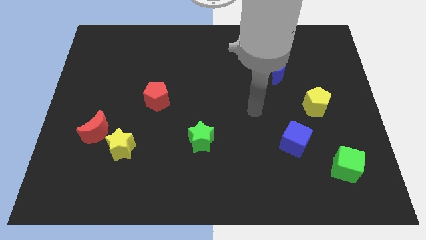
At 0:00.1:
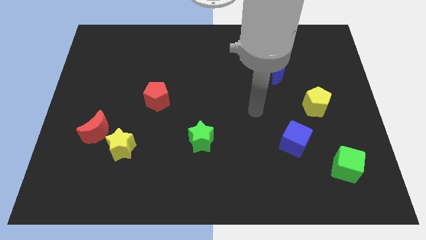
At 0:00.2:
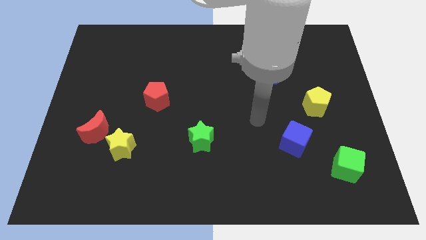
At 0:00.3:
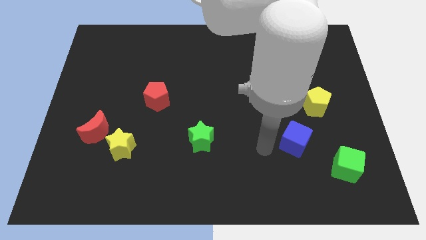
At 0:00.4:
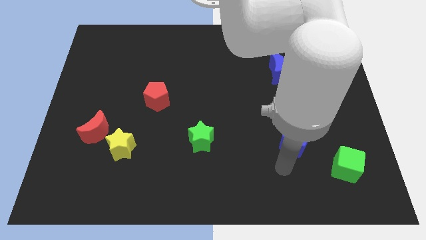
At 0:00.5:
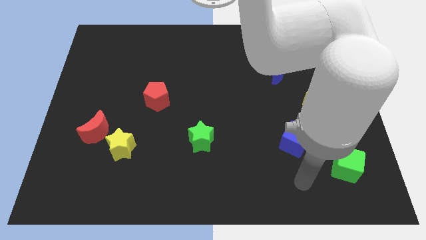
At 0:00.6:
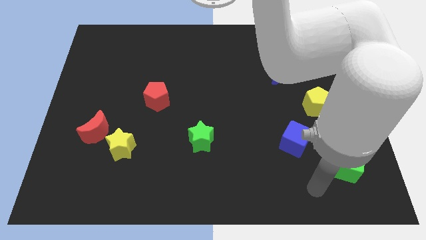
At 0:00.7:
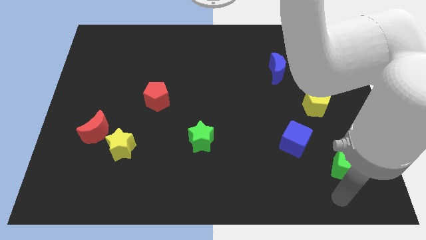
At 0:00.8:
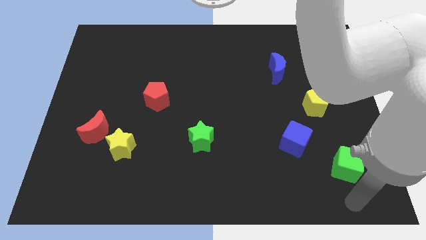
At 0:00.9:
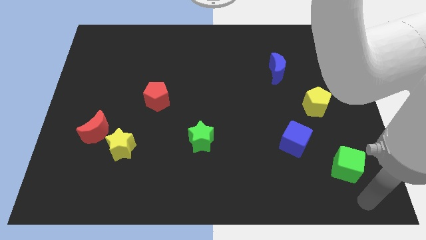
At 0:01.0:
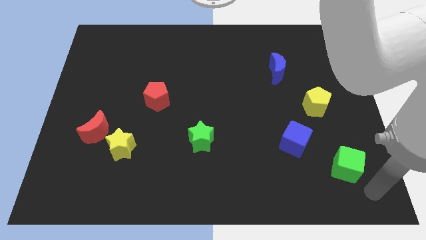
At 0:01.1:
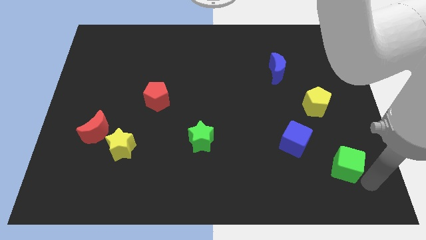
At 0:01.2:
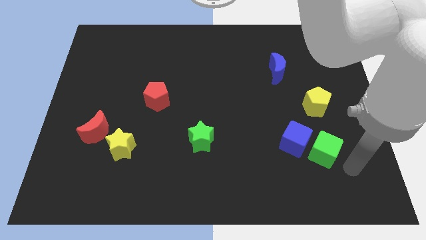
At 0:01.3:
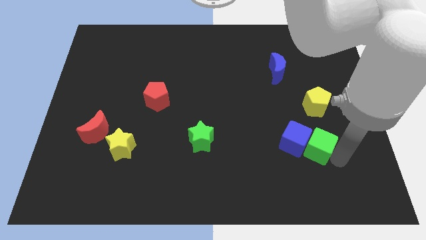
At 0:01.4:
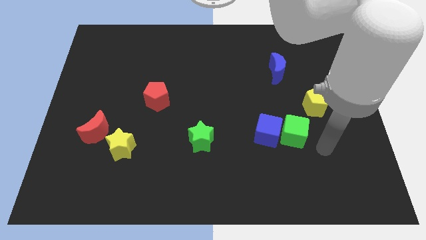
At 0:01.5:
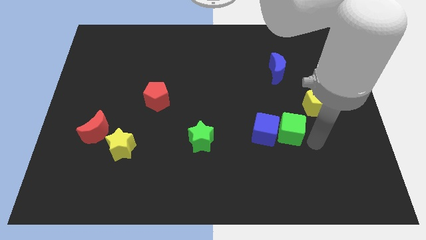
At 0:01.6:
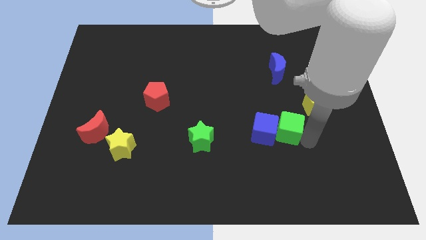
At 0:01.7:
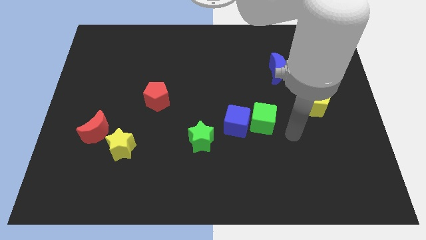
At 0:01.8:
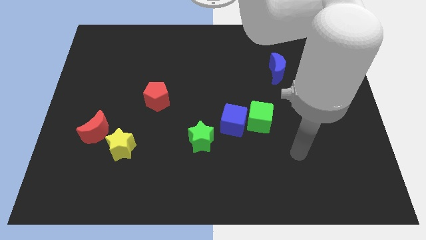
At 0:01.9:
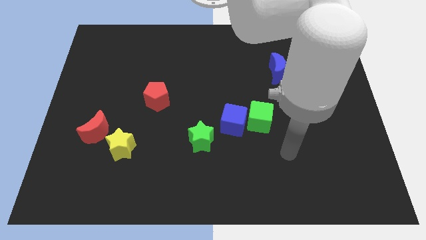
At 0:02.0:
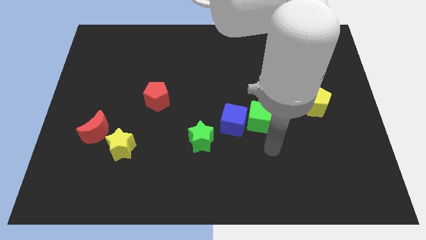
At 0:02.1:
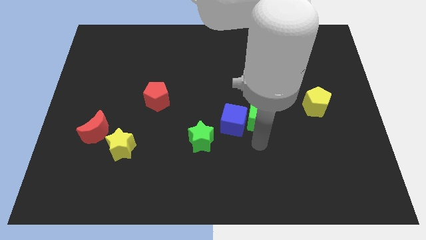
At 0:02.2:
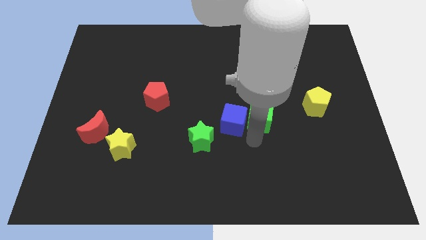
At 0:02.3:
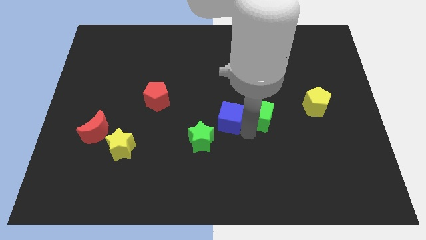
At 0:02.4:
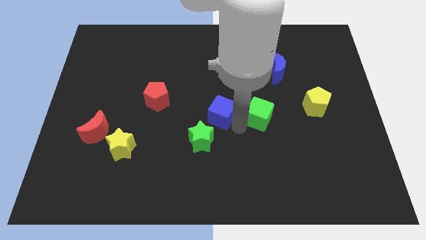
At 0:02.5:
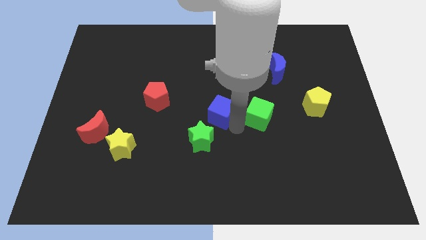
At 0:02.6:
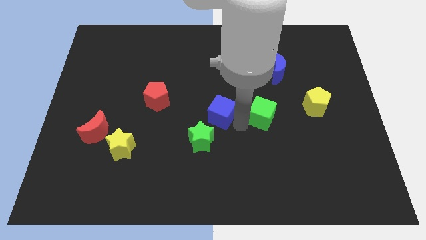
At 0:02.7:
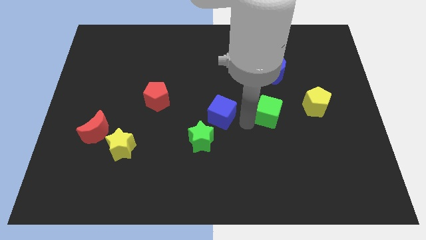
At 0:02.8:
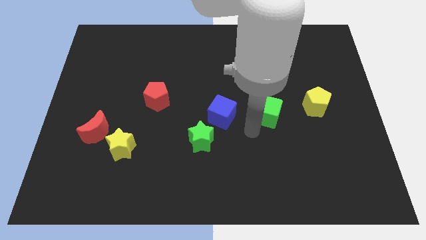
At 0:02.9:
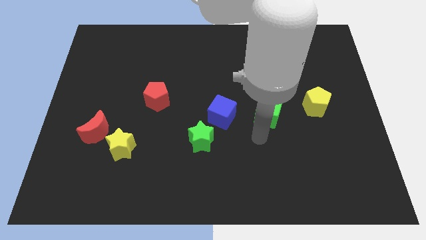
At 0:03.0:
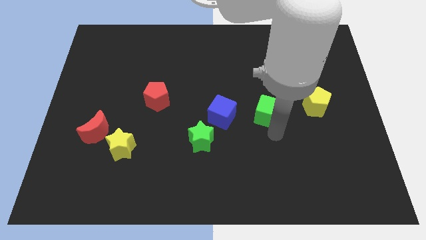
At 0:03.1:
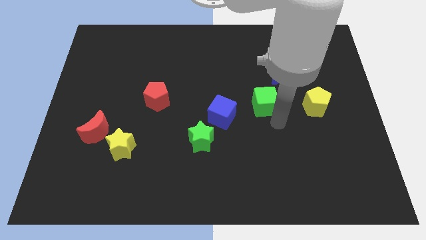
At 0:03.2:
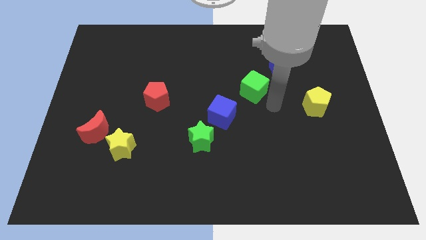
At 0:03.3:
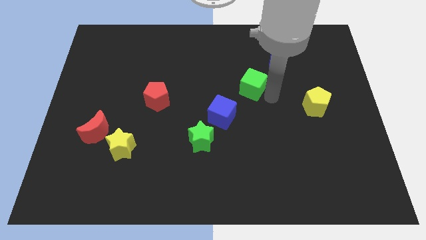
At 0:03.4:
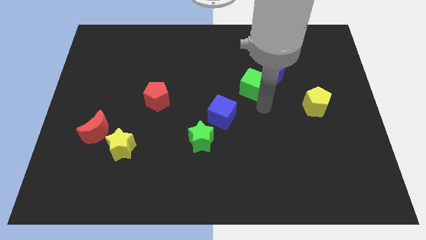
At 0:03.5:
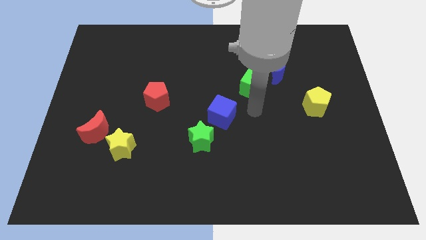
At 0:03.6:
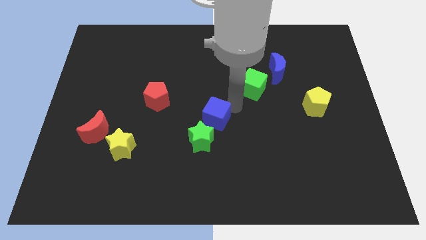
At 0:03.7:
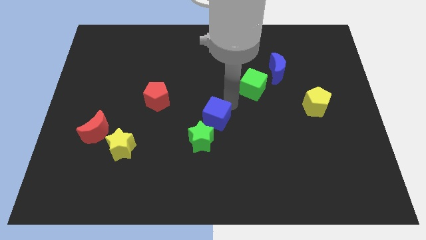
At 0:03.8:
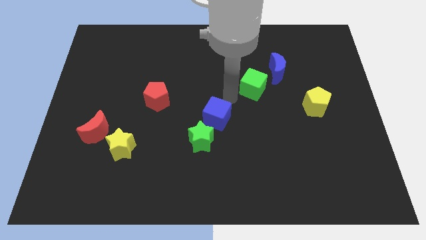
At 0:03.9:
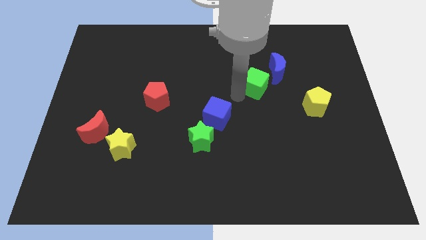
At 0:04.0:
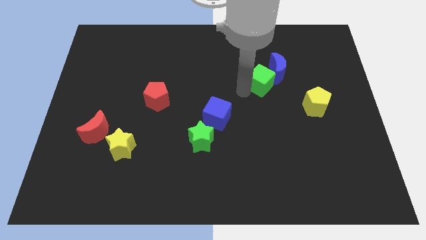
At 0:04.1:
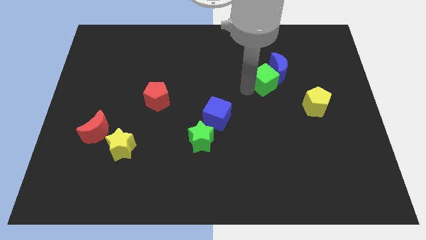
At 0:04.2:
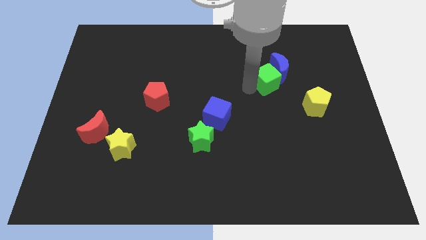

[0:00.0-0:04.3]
move the green cube towards the blue moon

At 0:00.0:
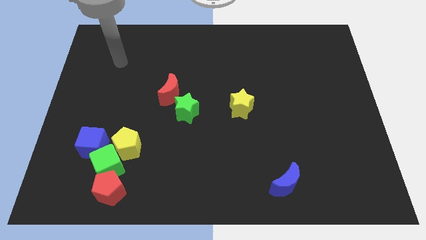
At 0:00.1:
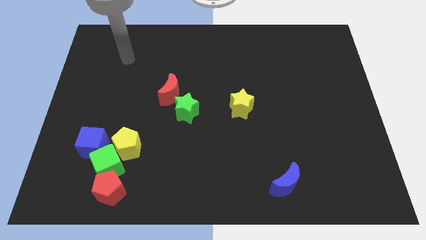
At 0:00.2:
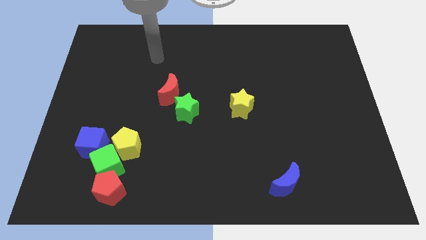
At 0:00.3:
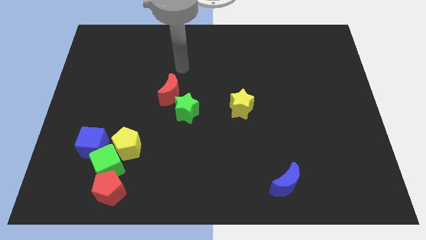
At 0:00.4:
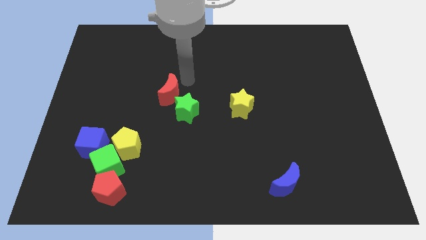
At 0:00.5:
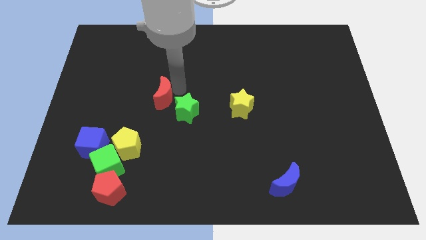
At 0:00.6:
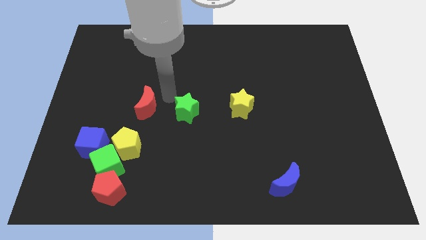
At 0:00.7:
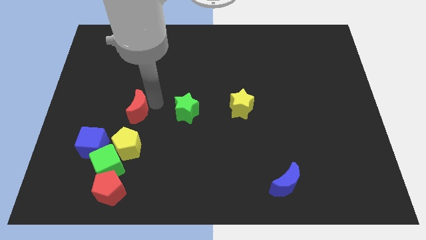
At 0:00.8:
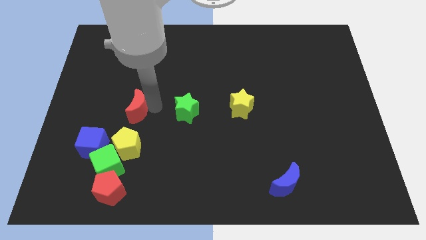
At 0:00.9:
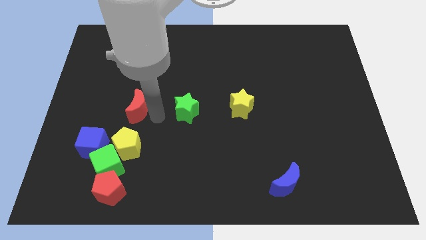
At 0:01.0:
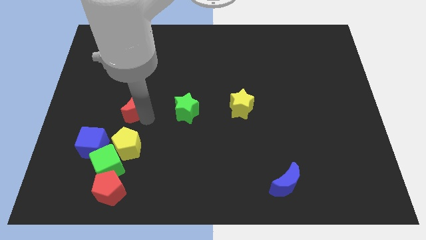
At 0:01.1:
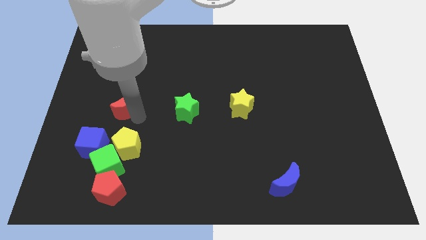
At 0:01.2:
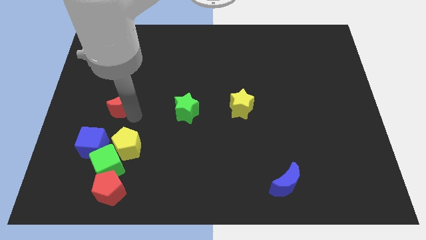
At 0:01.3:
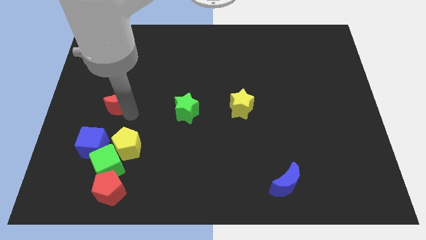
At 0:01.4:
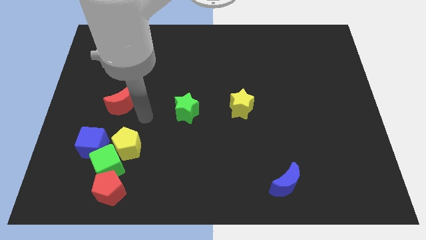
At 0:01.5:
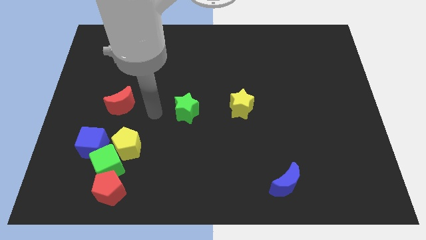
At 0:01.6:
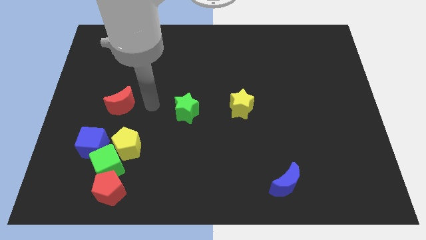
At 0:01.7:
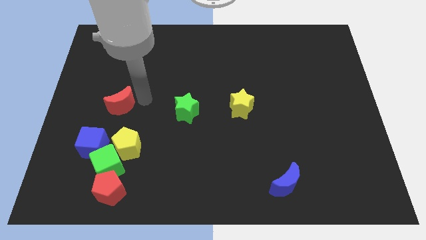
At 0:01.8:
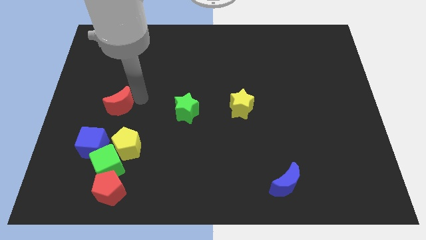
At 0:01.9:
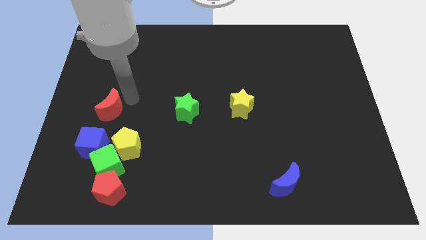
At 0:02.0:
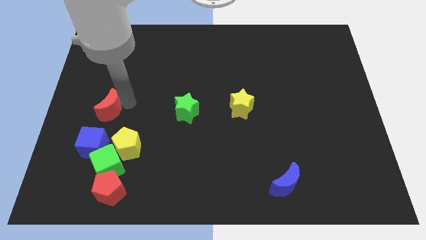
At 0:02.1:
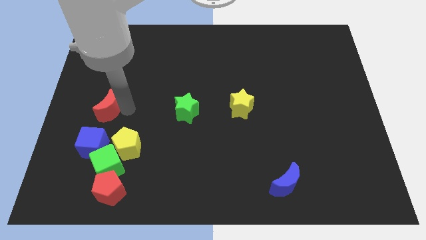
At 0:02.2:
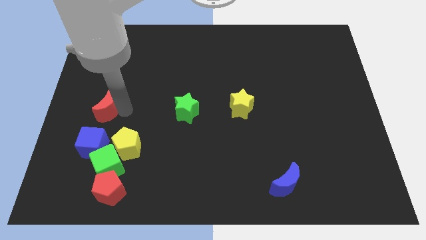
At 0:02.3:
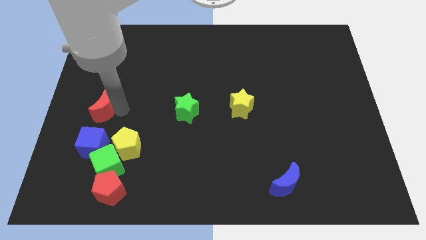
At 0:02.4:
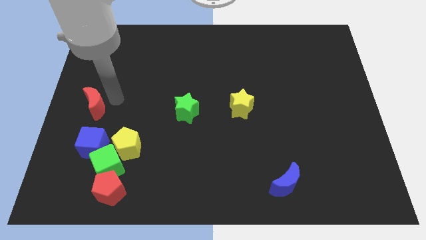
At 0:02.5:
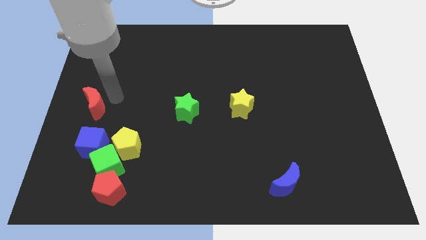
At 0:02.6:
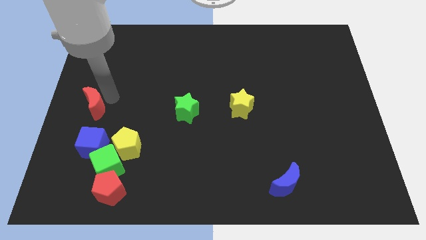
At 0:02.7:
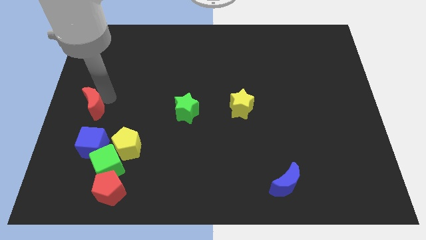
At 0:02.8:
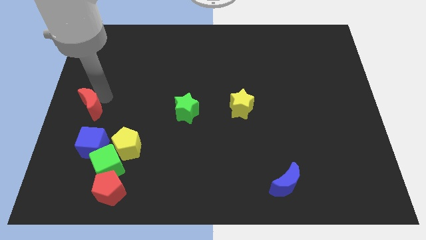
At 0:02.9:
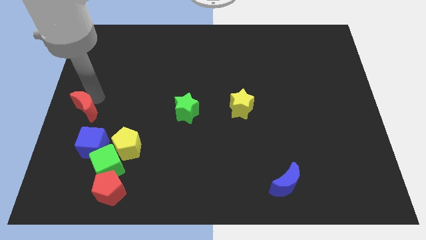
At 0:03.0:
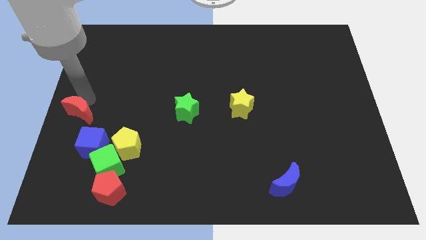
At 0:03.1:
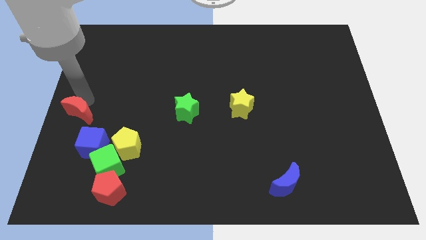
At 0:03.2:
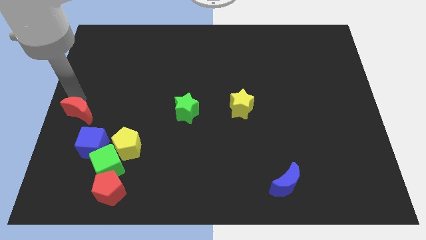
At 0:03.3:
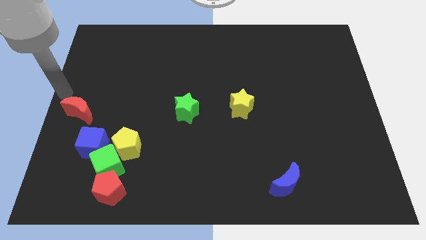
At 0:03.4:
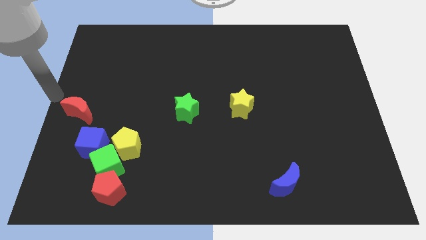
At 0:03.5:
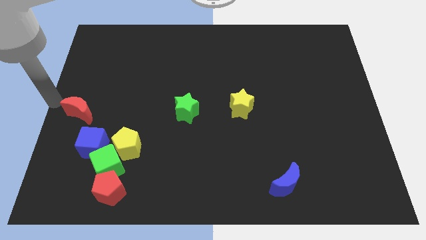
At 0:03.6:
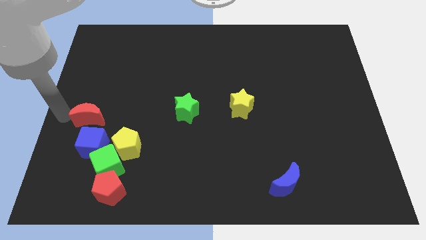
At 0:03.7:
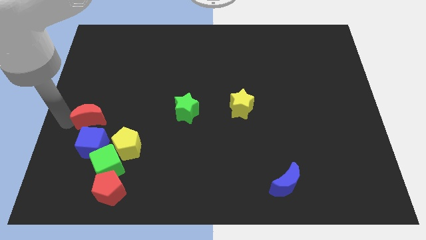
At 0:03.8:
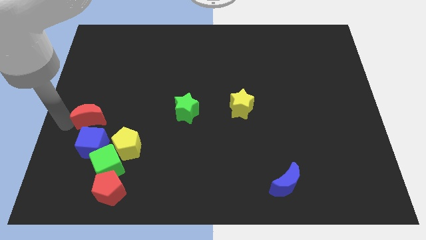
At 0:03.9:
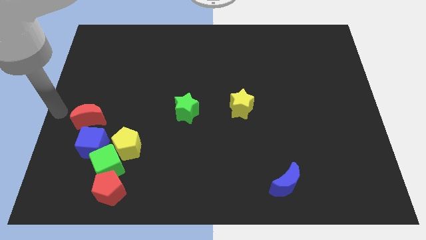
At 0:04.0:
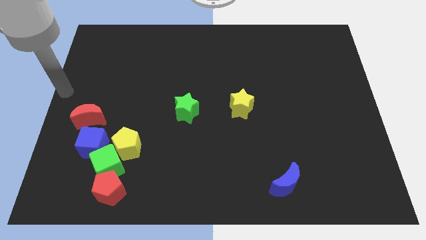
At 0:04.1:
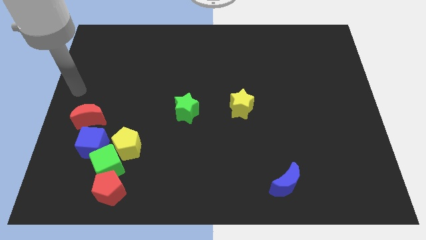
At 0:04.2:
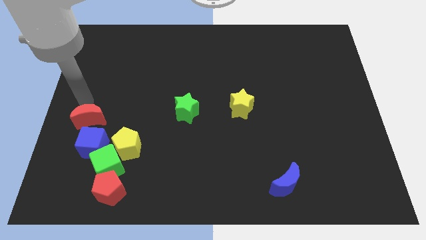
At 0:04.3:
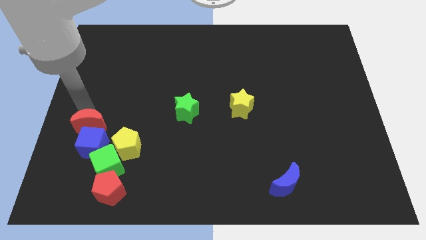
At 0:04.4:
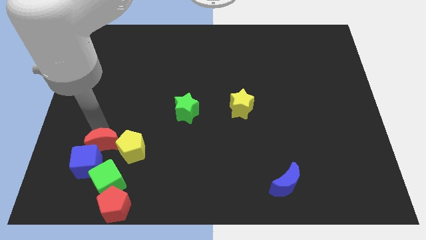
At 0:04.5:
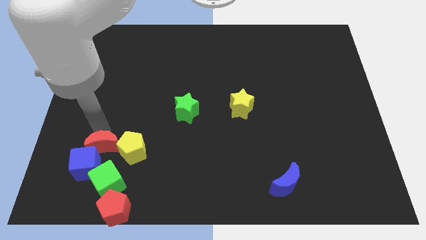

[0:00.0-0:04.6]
push the red moon next to the blue cube
